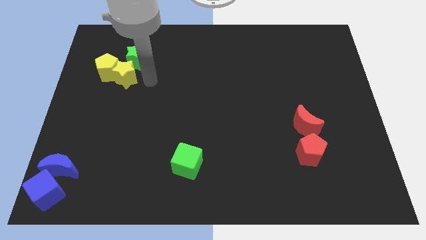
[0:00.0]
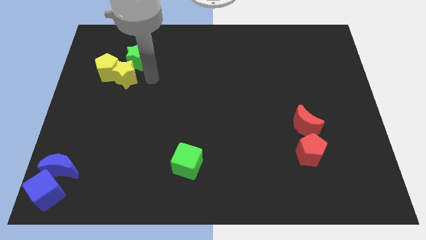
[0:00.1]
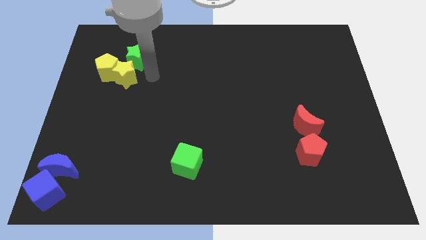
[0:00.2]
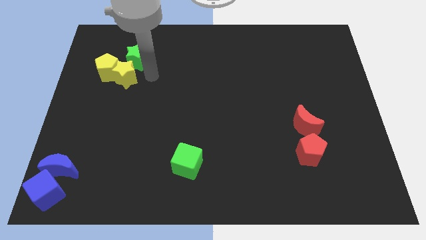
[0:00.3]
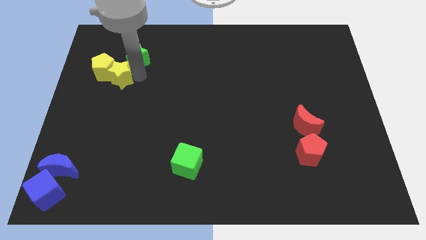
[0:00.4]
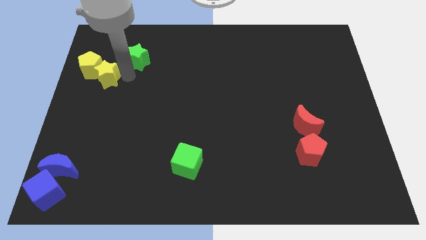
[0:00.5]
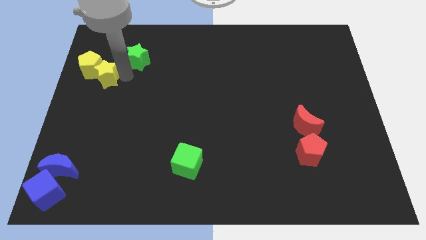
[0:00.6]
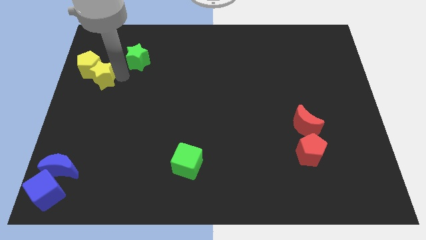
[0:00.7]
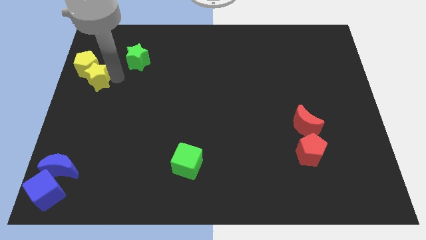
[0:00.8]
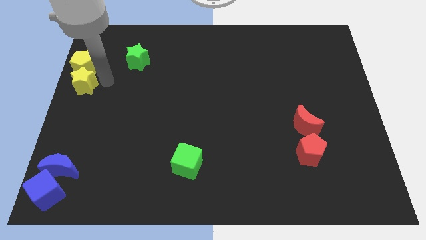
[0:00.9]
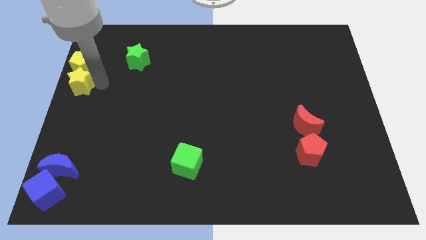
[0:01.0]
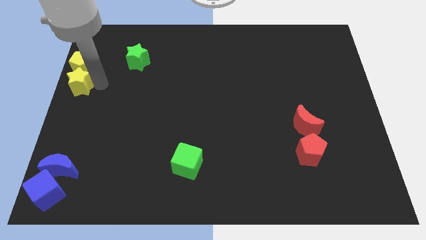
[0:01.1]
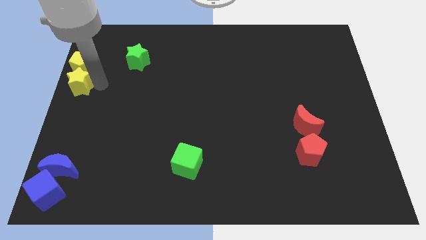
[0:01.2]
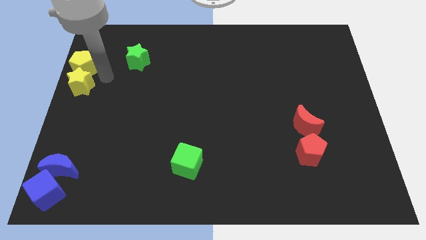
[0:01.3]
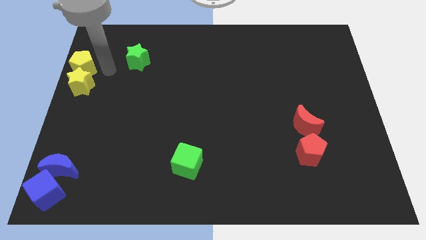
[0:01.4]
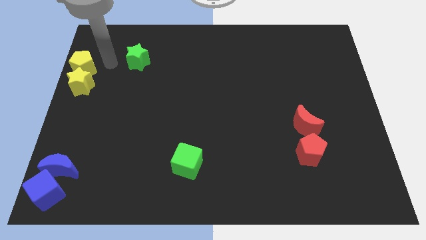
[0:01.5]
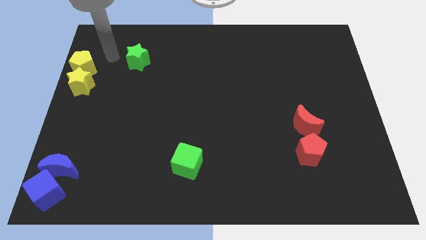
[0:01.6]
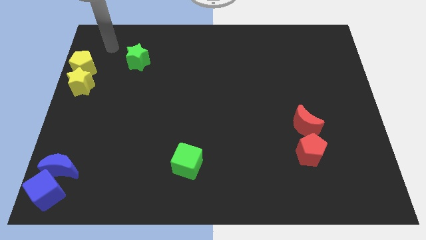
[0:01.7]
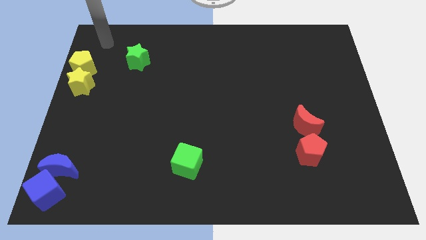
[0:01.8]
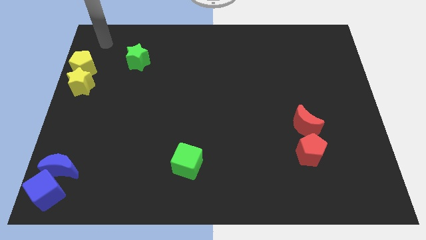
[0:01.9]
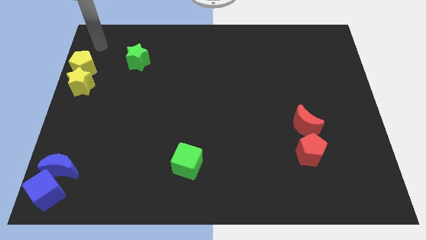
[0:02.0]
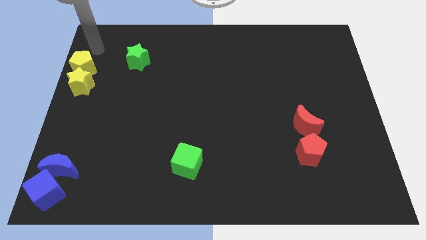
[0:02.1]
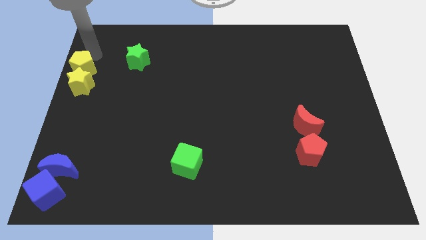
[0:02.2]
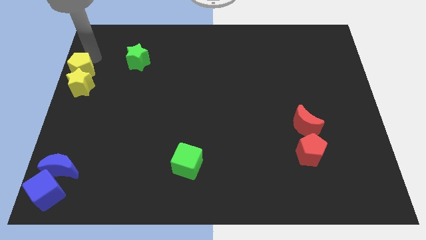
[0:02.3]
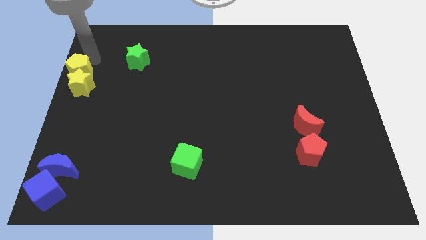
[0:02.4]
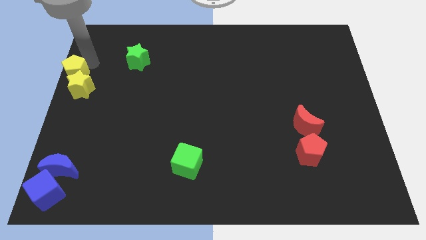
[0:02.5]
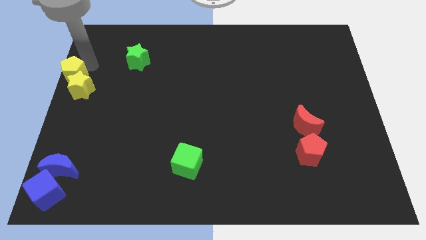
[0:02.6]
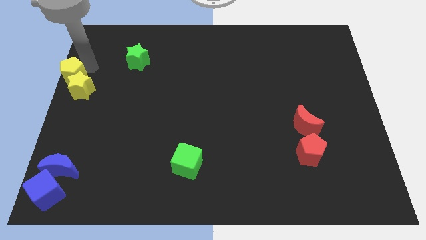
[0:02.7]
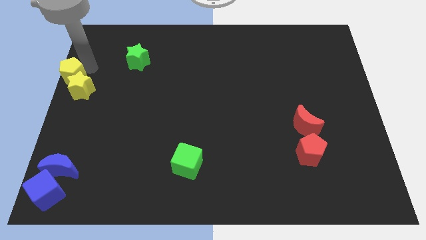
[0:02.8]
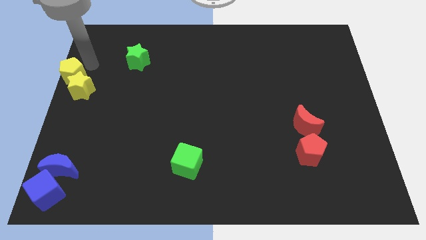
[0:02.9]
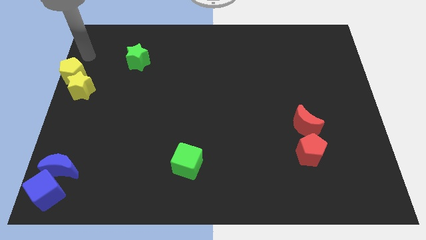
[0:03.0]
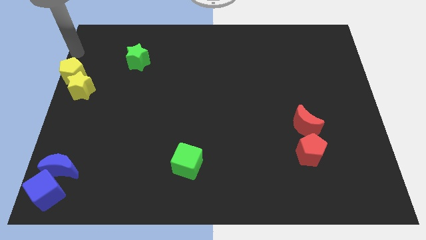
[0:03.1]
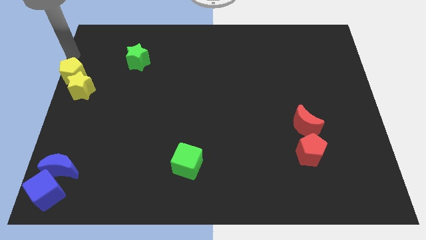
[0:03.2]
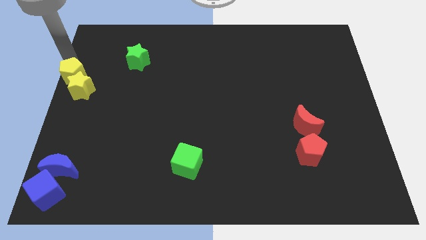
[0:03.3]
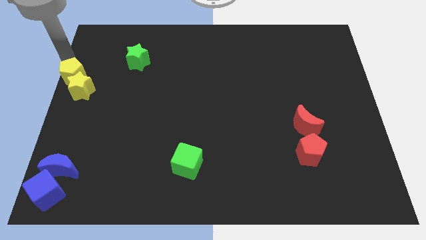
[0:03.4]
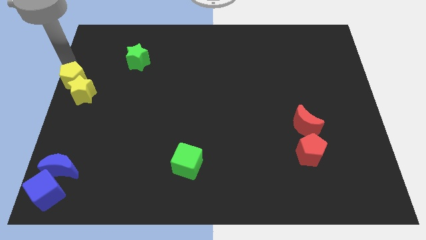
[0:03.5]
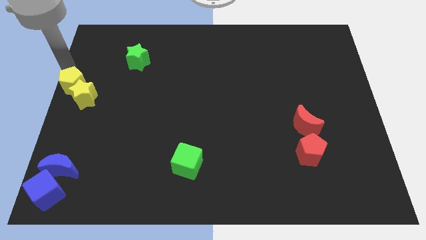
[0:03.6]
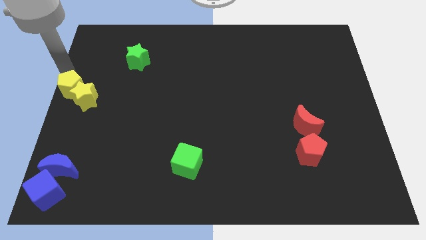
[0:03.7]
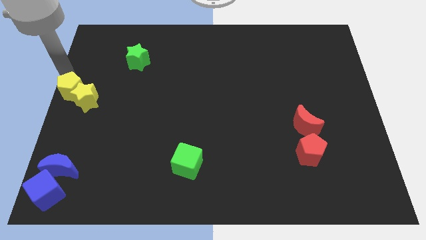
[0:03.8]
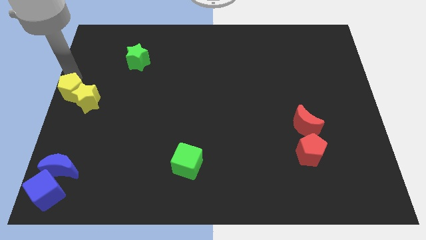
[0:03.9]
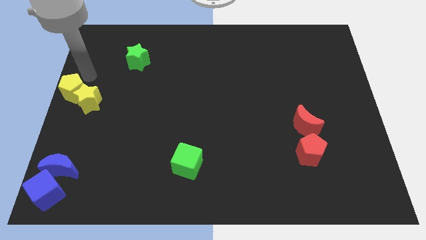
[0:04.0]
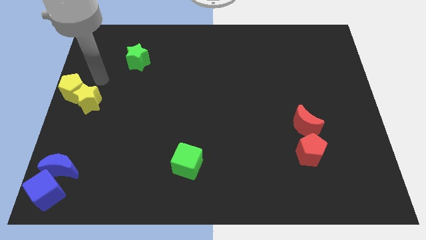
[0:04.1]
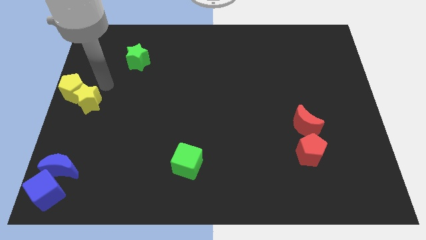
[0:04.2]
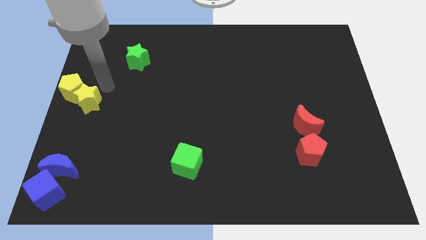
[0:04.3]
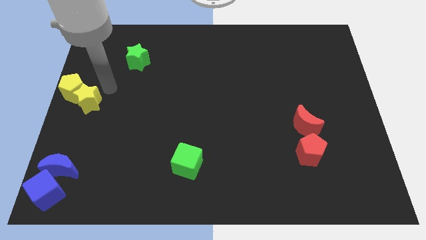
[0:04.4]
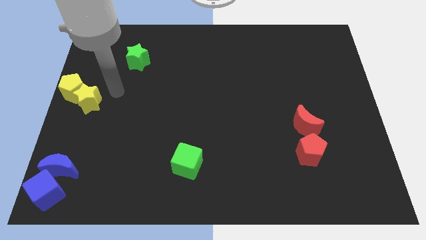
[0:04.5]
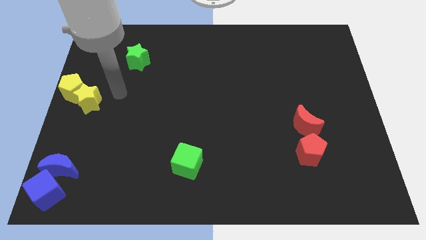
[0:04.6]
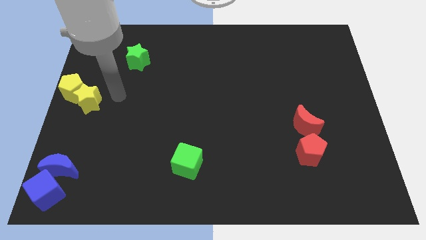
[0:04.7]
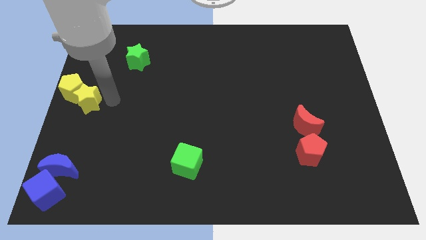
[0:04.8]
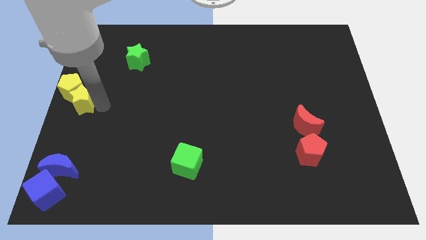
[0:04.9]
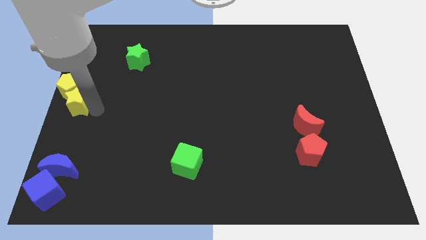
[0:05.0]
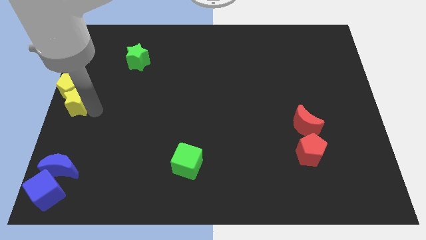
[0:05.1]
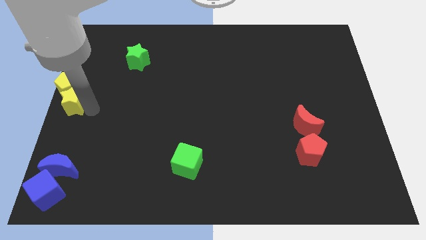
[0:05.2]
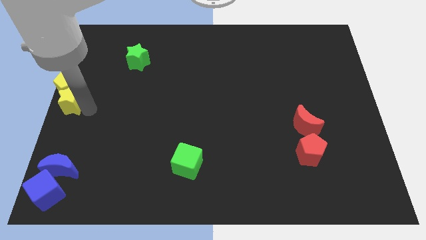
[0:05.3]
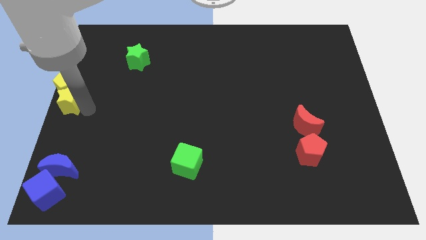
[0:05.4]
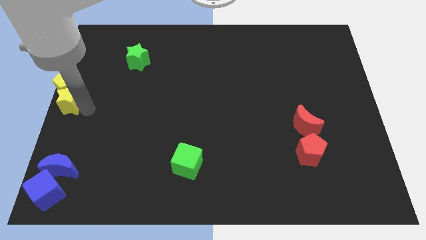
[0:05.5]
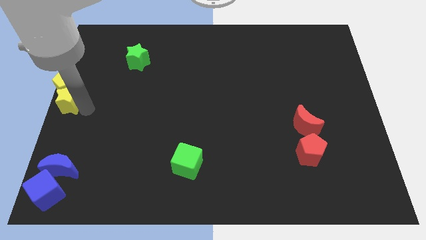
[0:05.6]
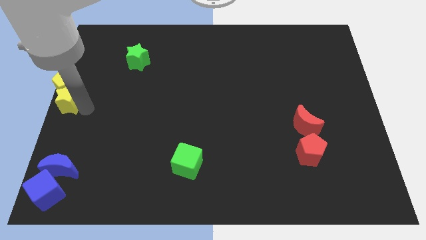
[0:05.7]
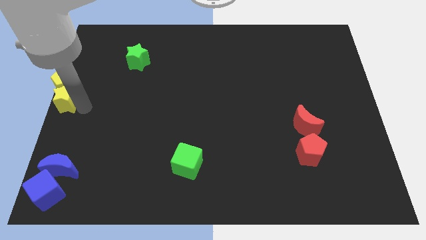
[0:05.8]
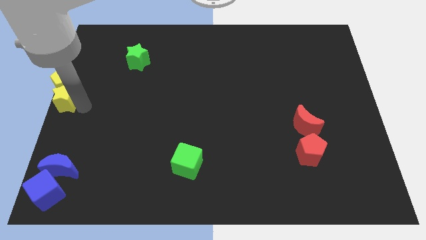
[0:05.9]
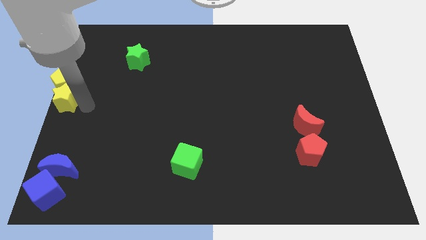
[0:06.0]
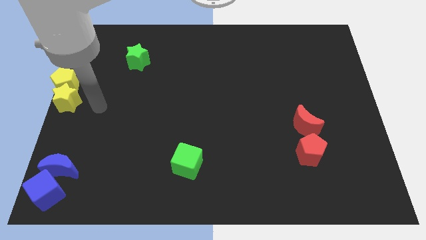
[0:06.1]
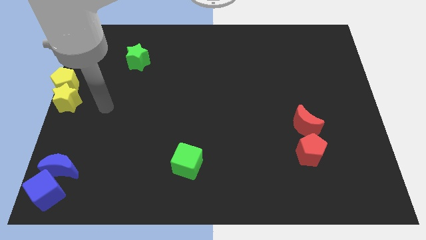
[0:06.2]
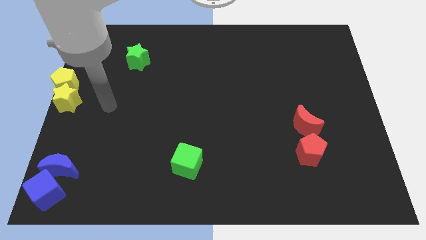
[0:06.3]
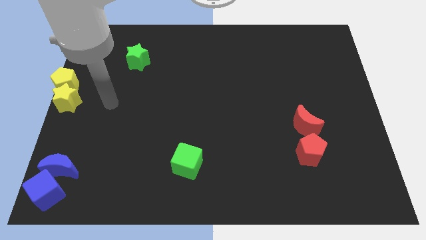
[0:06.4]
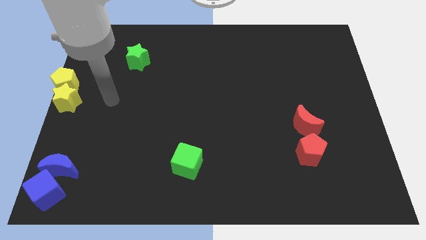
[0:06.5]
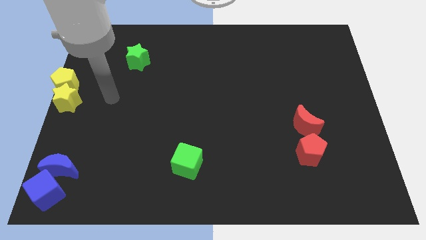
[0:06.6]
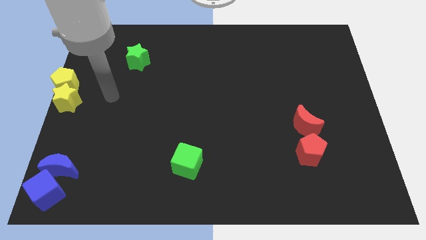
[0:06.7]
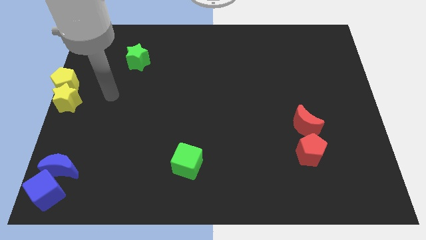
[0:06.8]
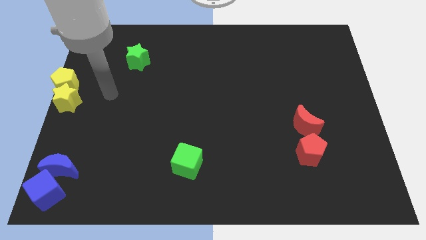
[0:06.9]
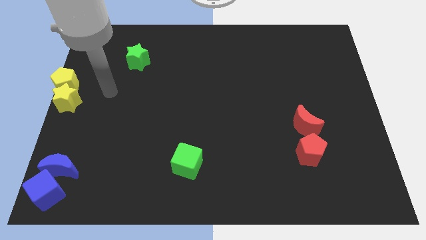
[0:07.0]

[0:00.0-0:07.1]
move the yellow blocks to the left center of the board

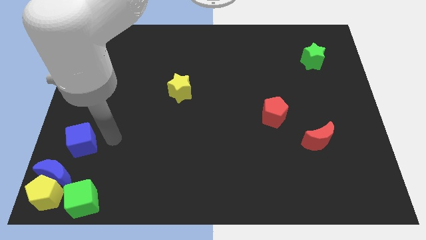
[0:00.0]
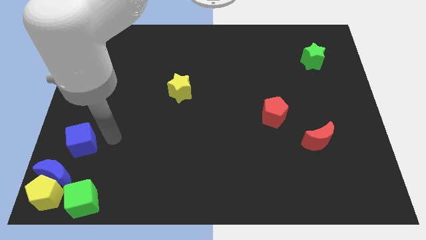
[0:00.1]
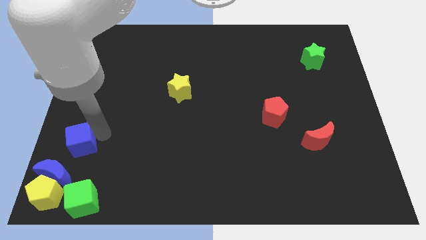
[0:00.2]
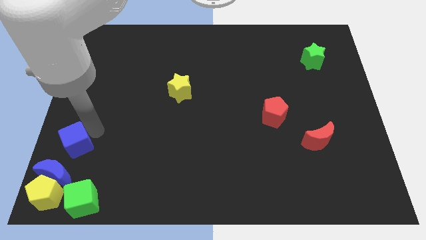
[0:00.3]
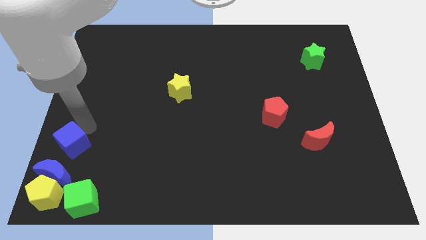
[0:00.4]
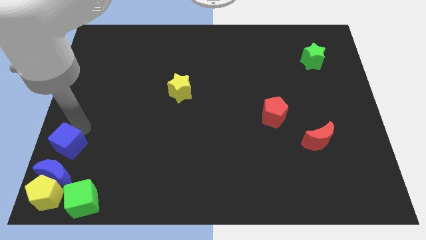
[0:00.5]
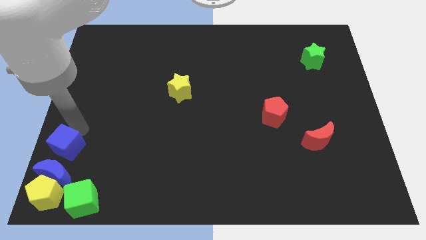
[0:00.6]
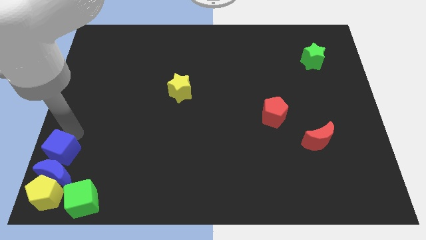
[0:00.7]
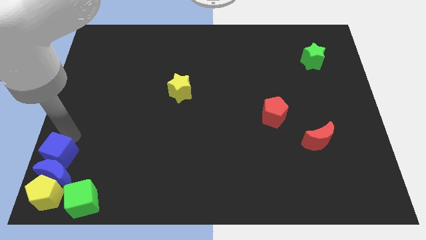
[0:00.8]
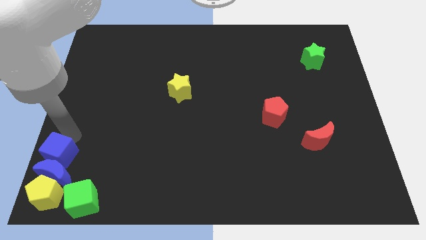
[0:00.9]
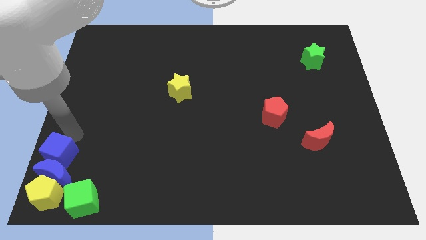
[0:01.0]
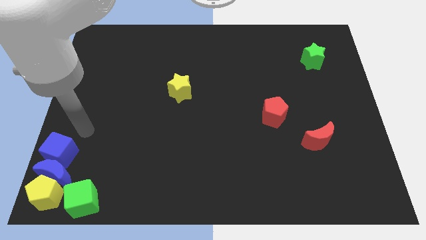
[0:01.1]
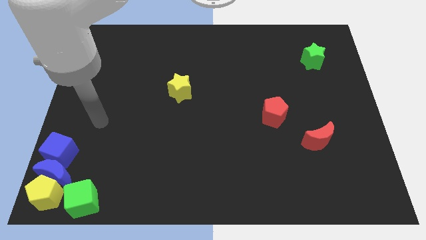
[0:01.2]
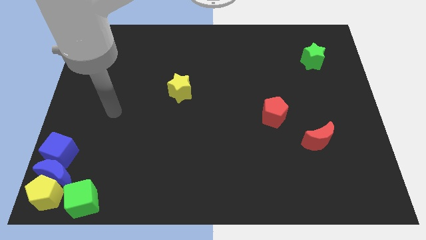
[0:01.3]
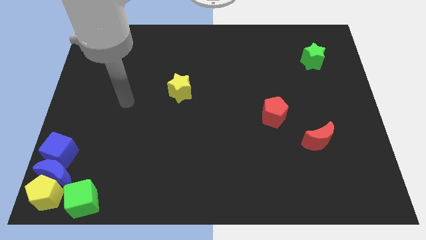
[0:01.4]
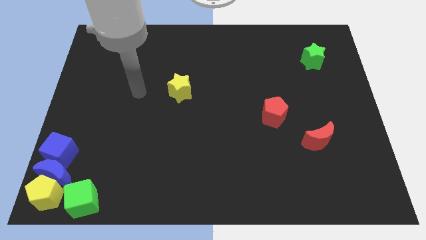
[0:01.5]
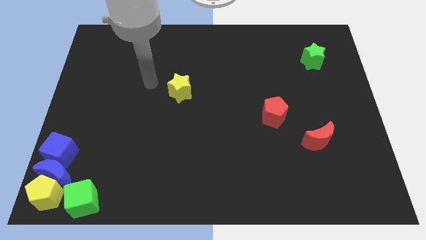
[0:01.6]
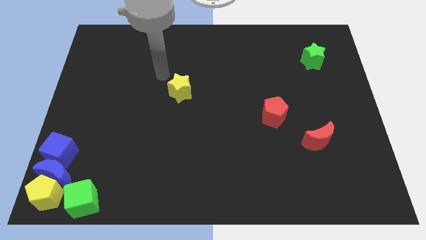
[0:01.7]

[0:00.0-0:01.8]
move blue cube into blue moon

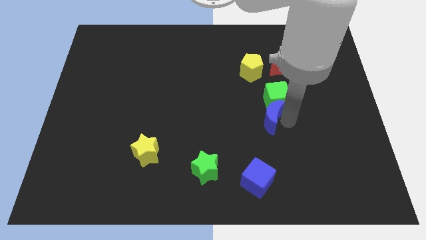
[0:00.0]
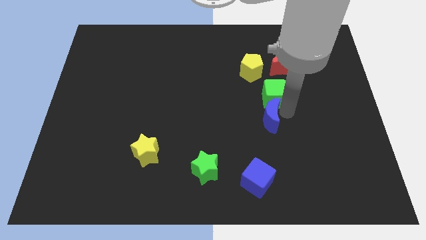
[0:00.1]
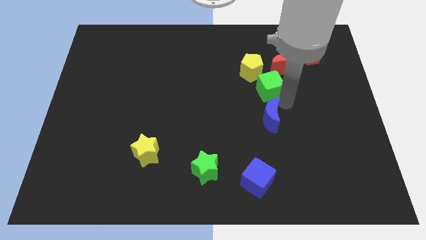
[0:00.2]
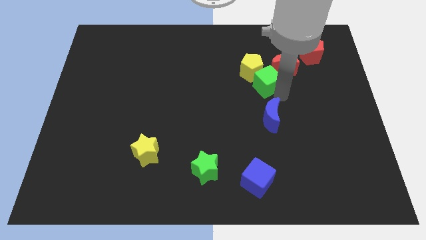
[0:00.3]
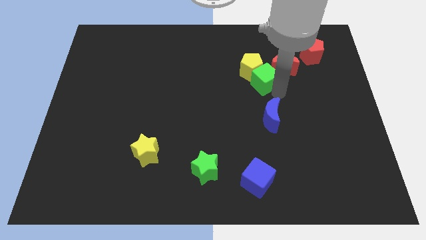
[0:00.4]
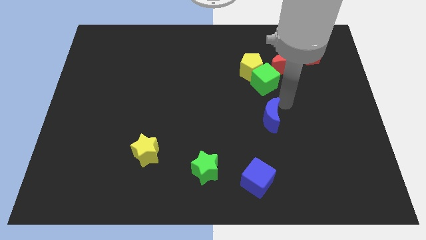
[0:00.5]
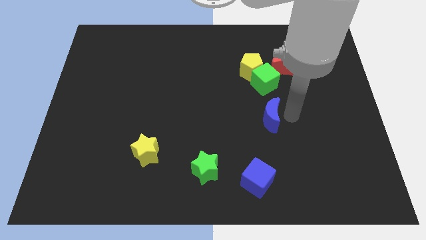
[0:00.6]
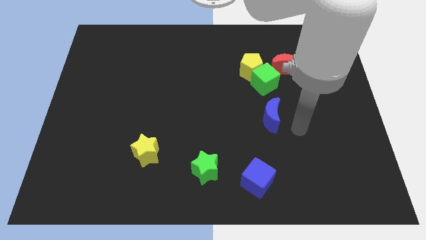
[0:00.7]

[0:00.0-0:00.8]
push green cube into yellow pentagon
